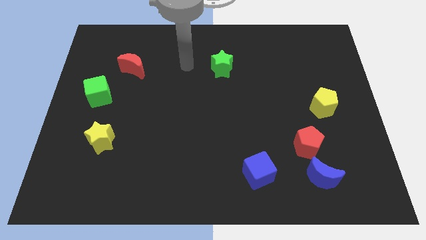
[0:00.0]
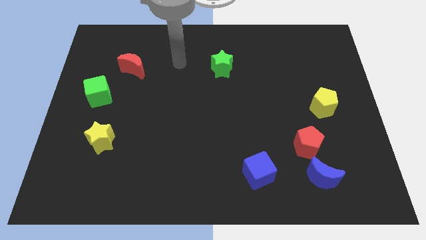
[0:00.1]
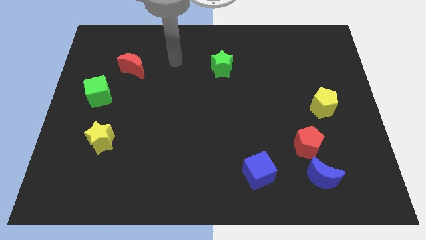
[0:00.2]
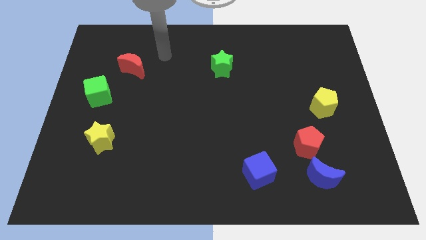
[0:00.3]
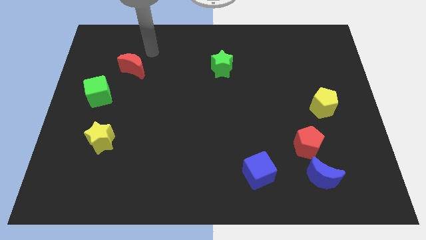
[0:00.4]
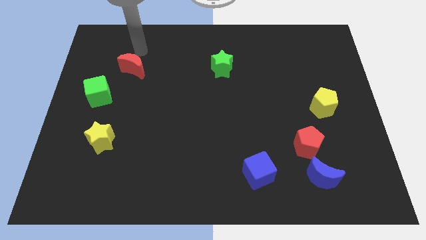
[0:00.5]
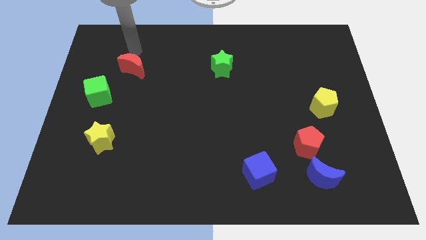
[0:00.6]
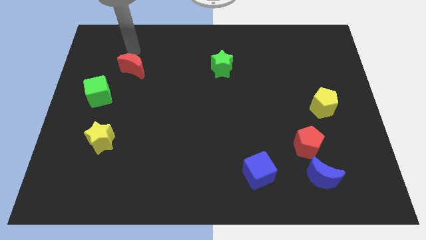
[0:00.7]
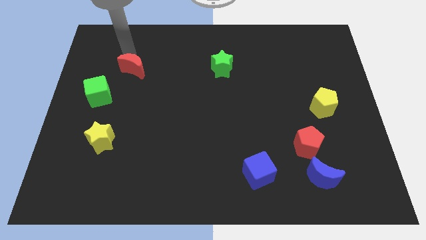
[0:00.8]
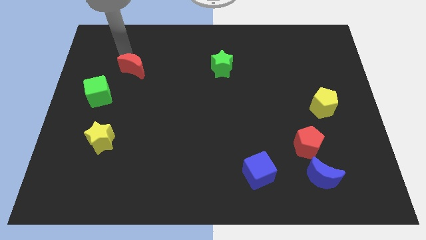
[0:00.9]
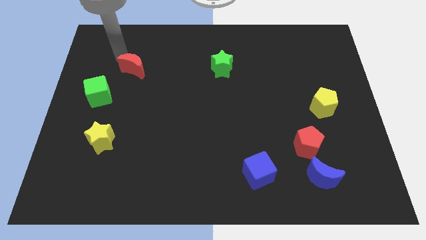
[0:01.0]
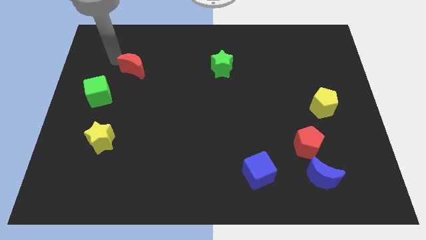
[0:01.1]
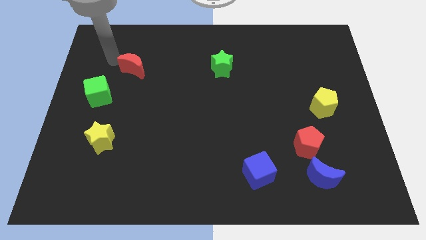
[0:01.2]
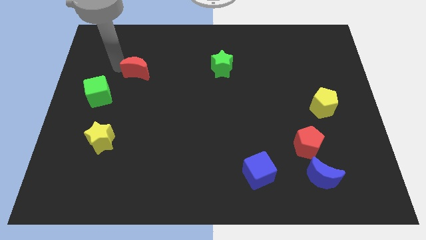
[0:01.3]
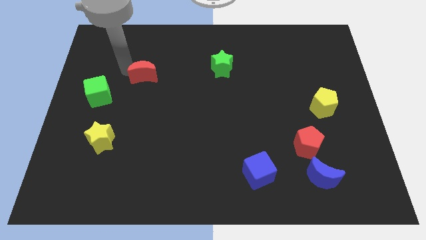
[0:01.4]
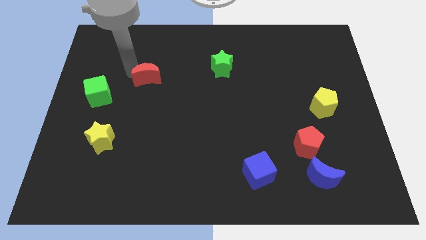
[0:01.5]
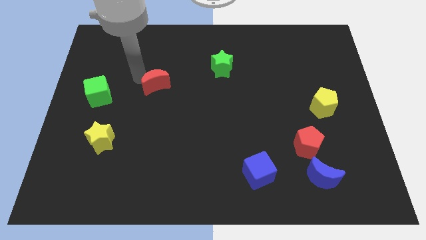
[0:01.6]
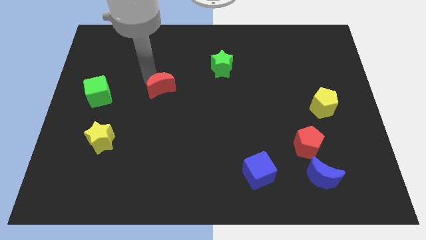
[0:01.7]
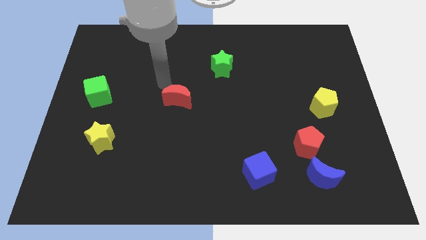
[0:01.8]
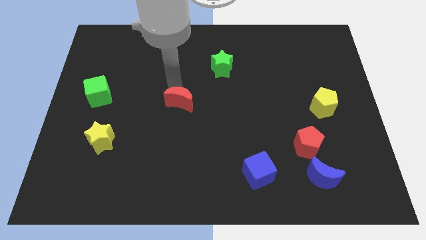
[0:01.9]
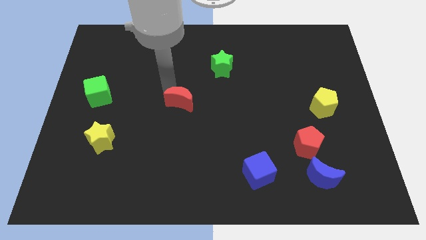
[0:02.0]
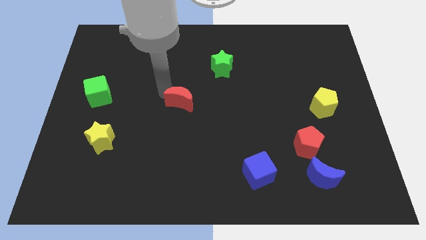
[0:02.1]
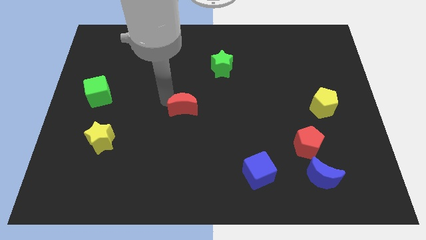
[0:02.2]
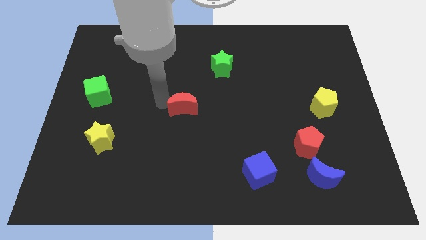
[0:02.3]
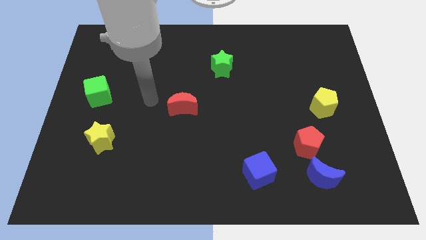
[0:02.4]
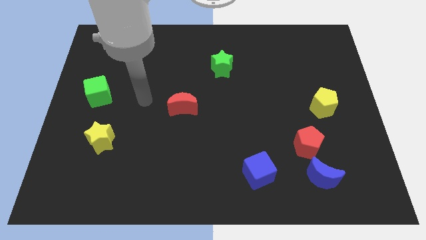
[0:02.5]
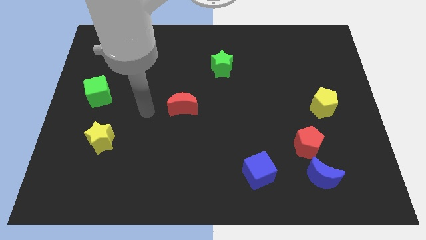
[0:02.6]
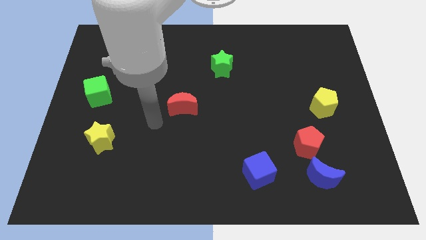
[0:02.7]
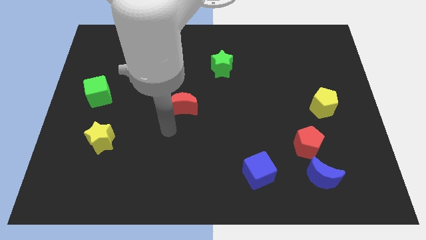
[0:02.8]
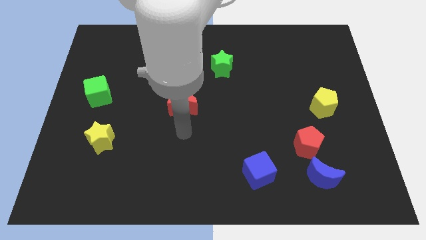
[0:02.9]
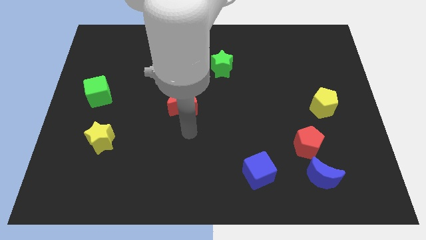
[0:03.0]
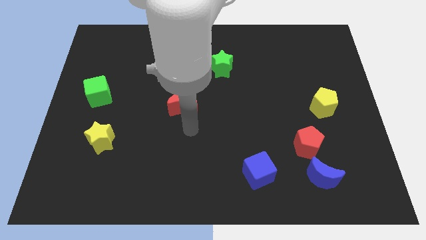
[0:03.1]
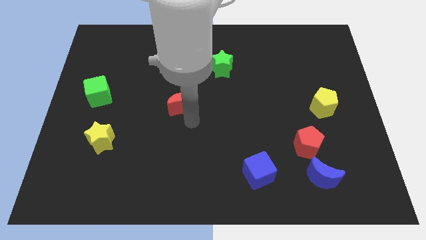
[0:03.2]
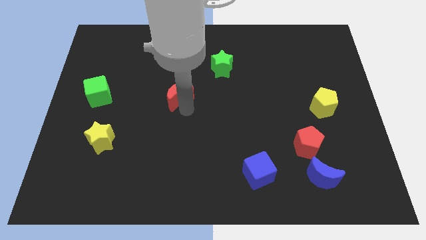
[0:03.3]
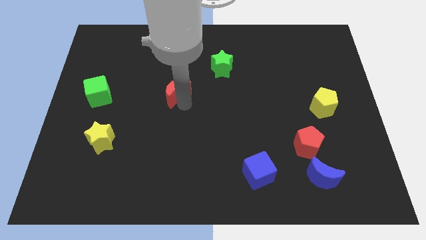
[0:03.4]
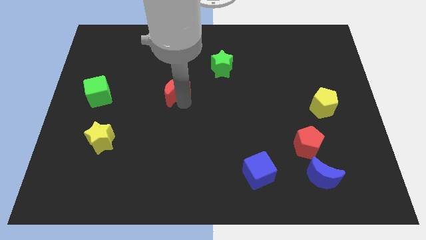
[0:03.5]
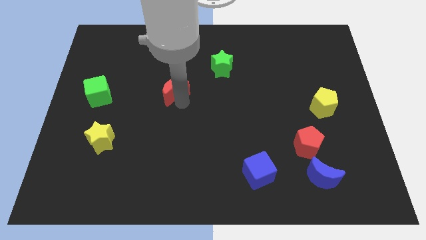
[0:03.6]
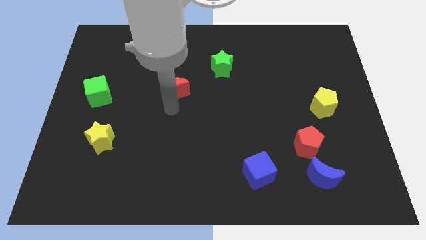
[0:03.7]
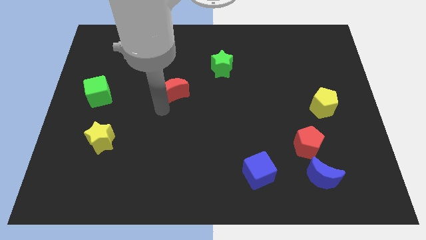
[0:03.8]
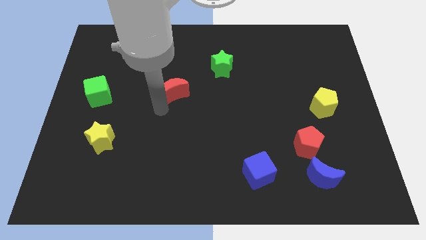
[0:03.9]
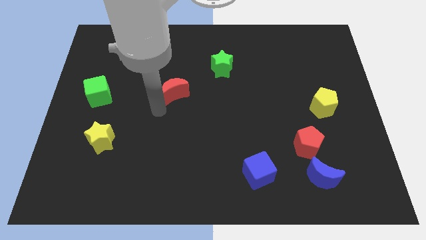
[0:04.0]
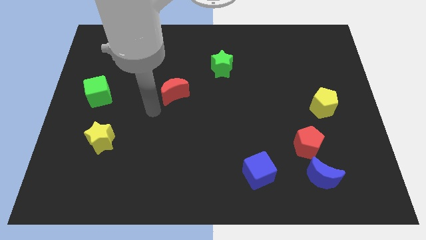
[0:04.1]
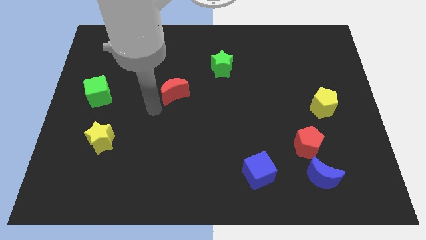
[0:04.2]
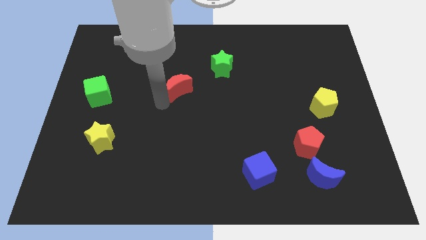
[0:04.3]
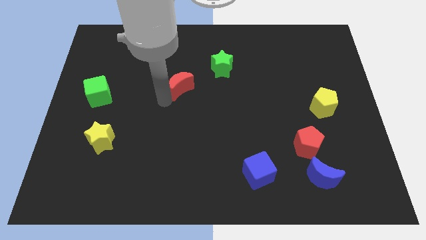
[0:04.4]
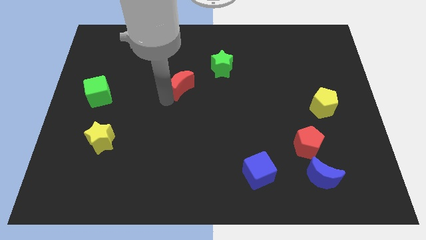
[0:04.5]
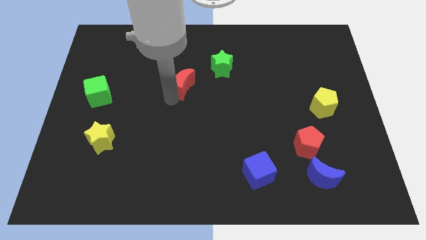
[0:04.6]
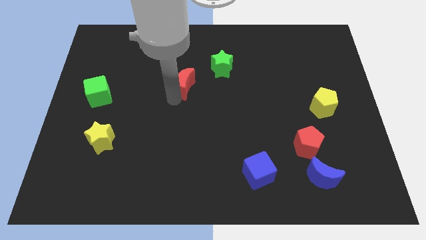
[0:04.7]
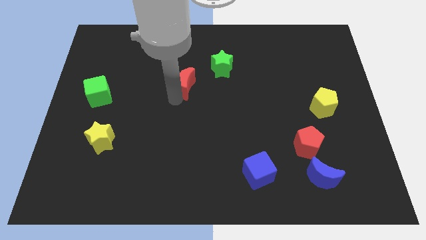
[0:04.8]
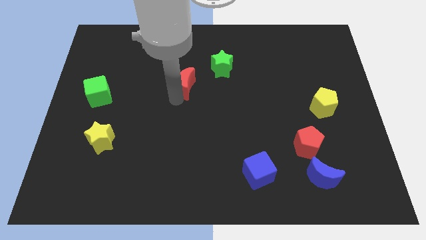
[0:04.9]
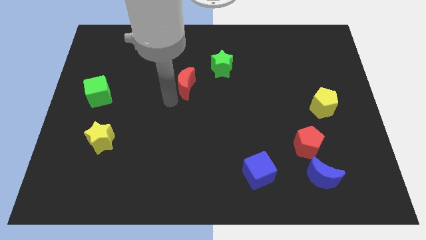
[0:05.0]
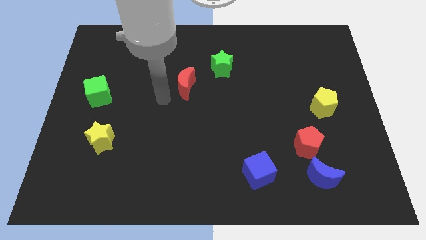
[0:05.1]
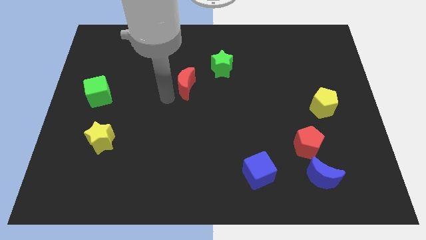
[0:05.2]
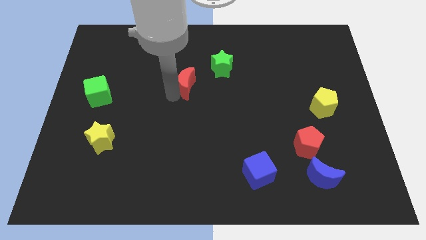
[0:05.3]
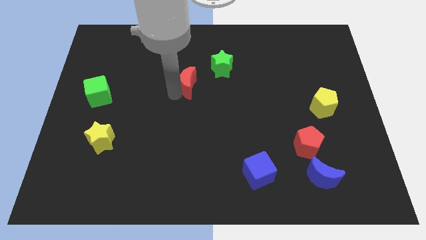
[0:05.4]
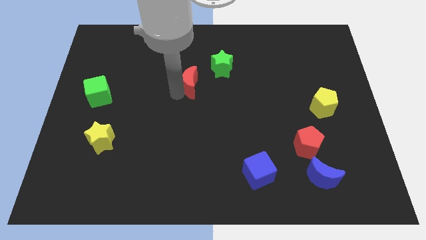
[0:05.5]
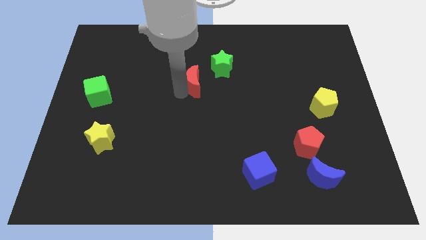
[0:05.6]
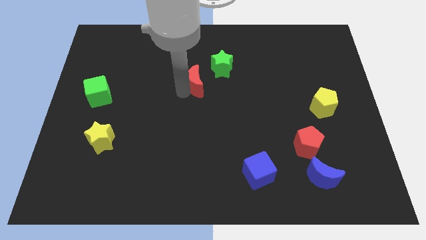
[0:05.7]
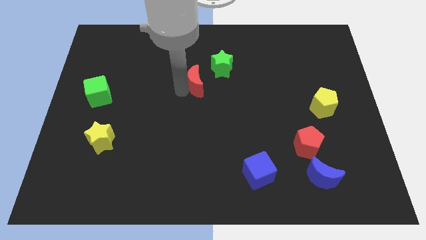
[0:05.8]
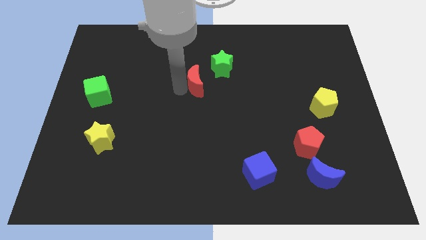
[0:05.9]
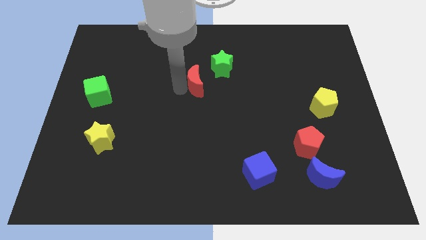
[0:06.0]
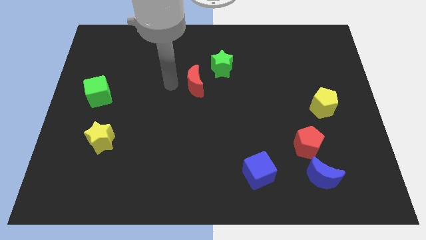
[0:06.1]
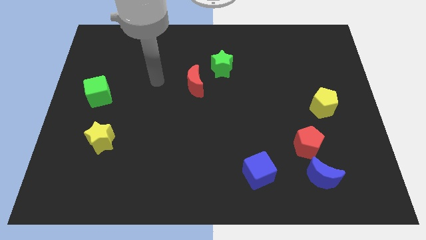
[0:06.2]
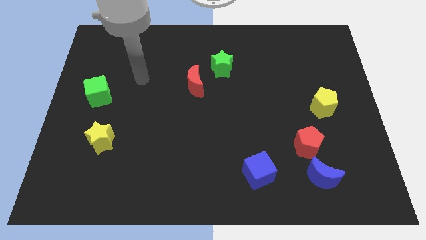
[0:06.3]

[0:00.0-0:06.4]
move the red crescent to the right of the board

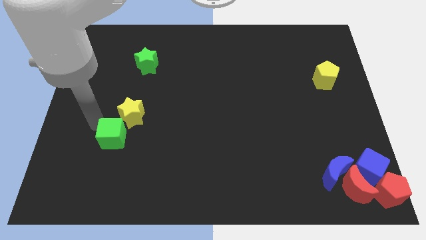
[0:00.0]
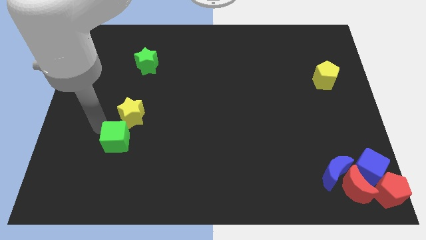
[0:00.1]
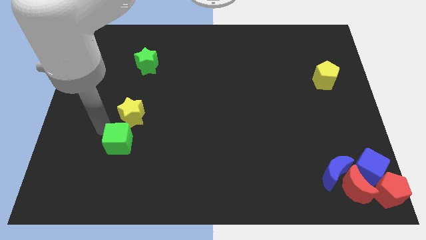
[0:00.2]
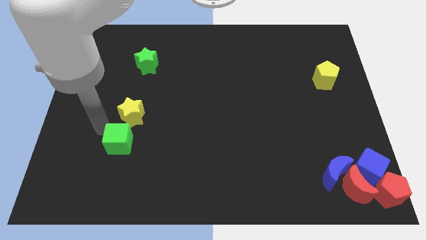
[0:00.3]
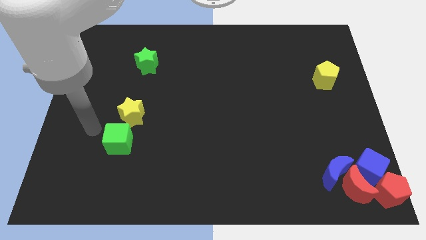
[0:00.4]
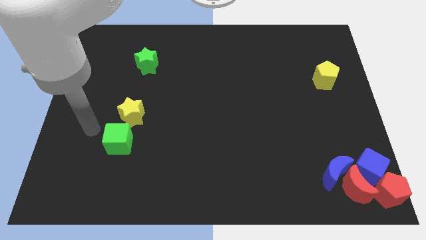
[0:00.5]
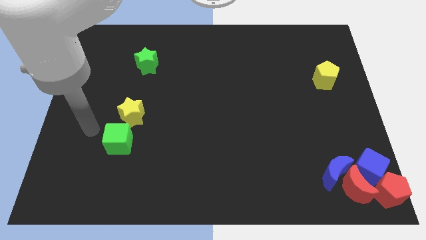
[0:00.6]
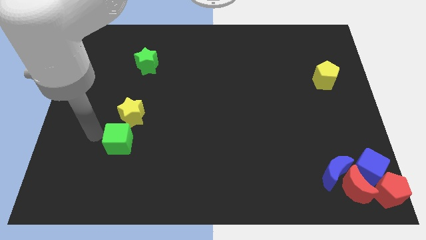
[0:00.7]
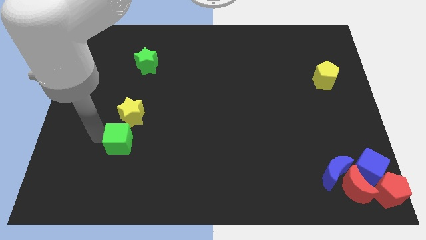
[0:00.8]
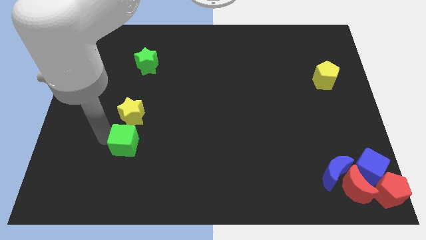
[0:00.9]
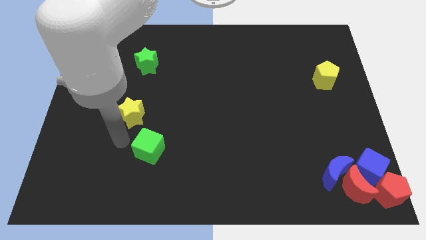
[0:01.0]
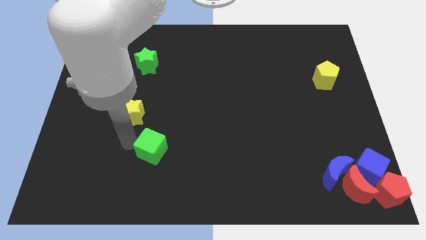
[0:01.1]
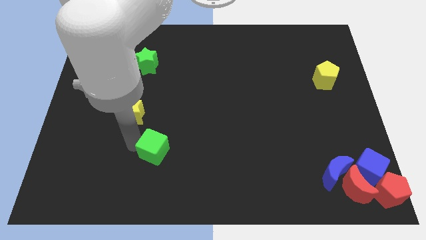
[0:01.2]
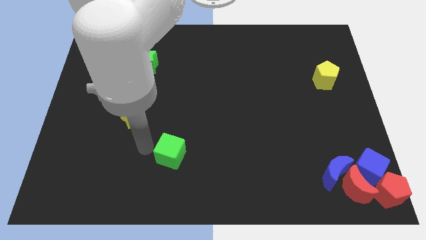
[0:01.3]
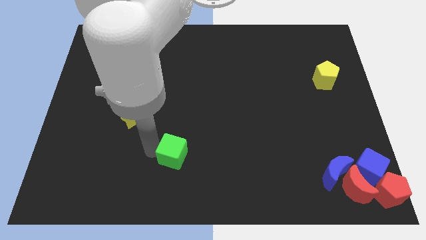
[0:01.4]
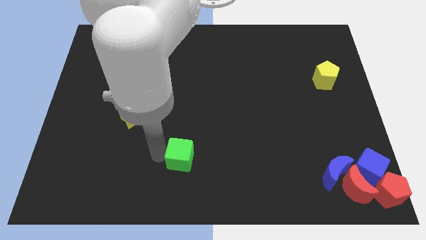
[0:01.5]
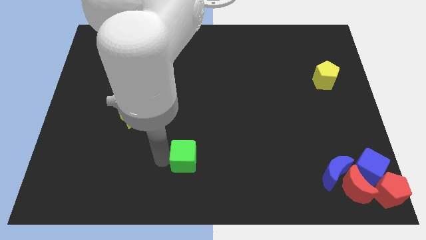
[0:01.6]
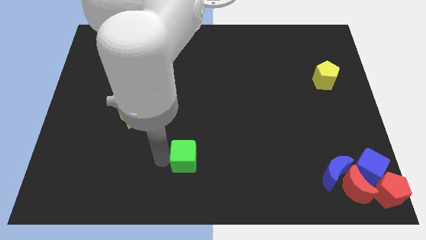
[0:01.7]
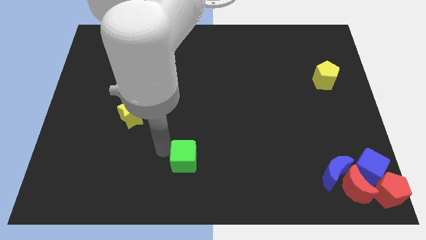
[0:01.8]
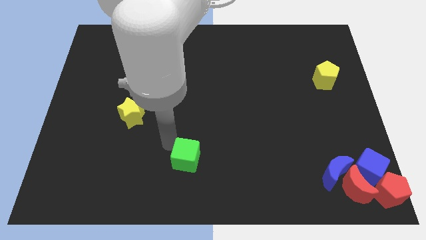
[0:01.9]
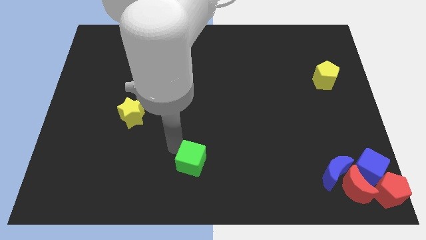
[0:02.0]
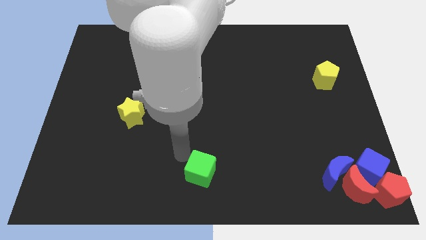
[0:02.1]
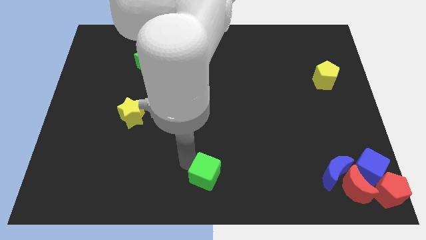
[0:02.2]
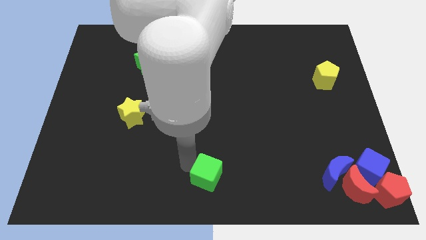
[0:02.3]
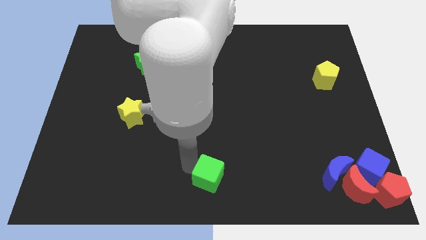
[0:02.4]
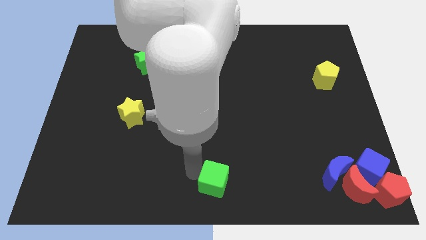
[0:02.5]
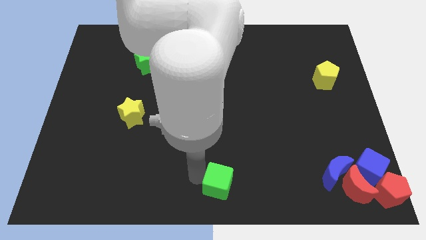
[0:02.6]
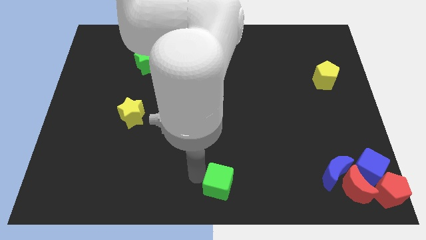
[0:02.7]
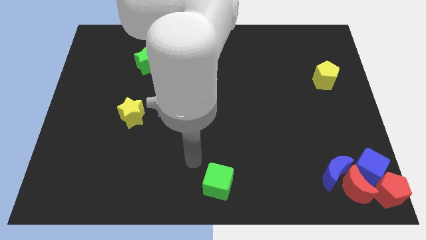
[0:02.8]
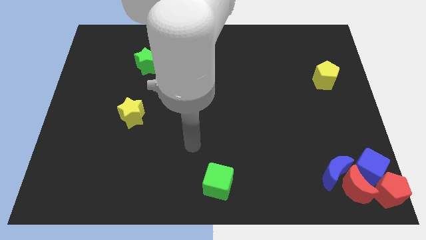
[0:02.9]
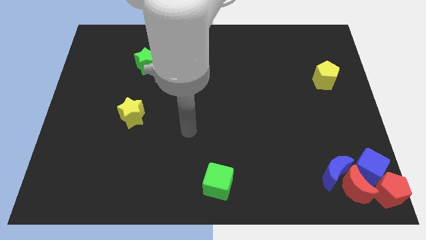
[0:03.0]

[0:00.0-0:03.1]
push the green cube to the bottom center of the board
